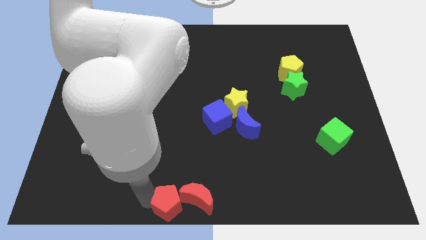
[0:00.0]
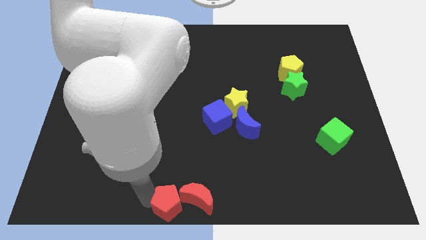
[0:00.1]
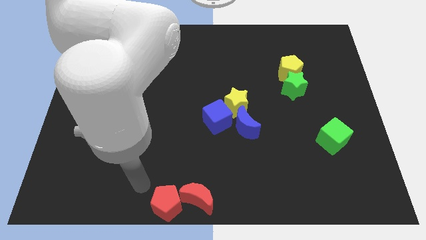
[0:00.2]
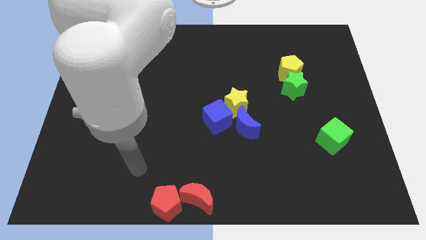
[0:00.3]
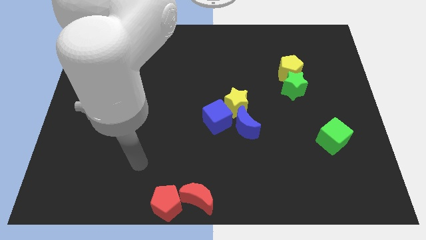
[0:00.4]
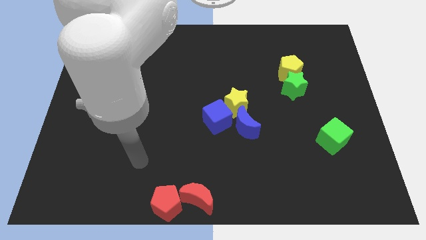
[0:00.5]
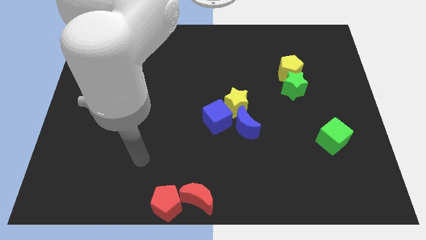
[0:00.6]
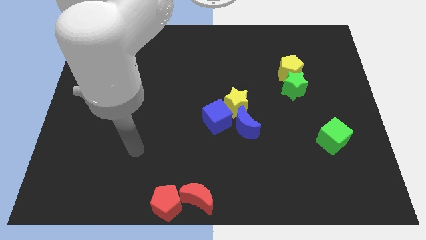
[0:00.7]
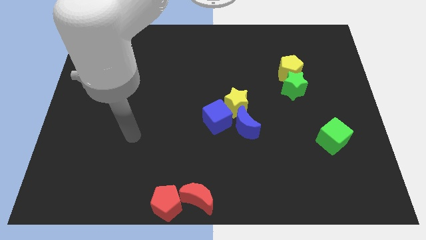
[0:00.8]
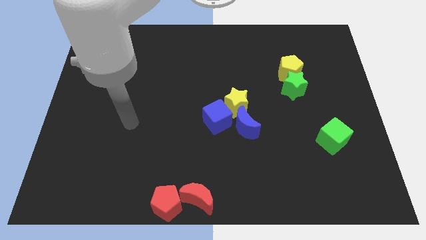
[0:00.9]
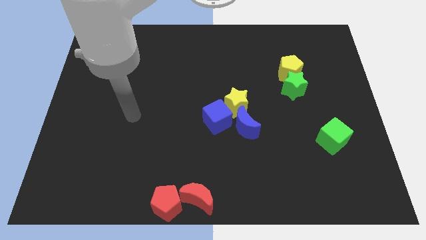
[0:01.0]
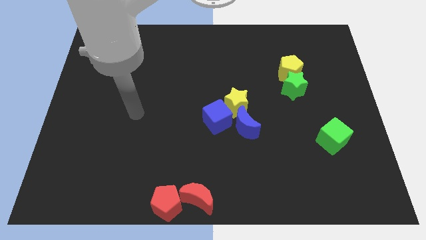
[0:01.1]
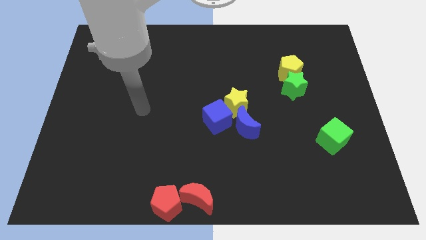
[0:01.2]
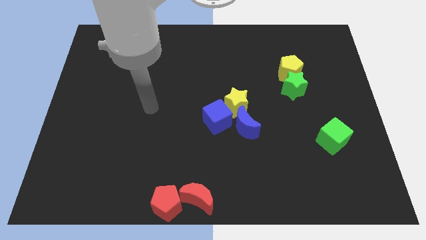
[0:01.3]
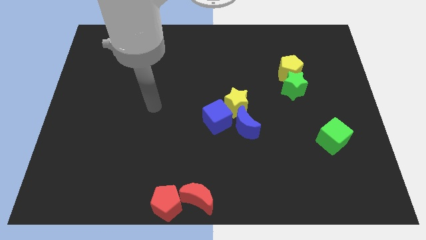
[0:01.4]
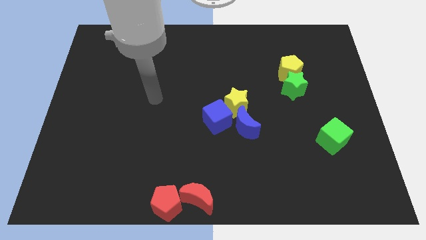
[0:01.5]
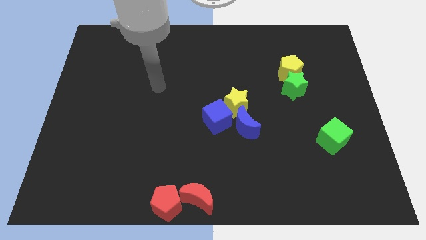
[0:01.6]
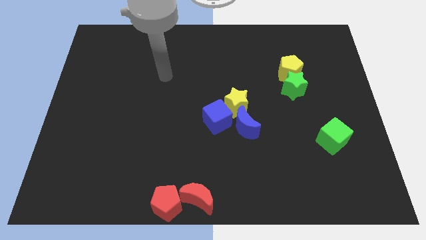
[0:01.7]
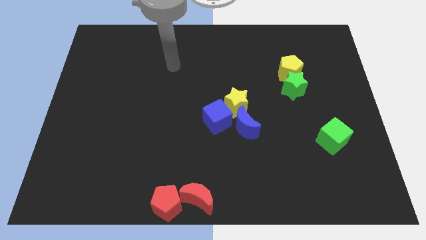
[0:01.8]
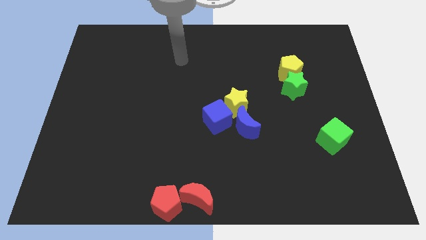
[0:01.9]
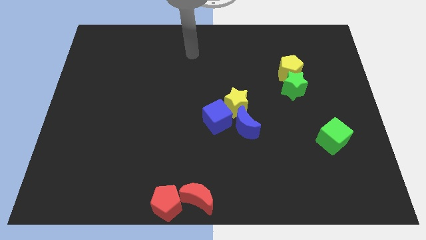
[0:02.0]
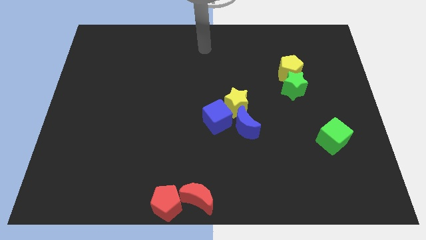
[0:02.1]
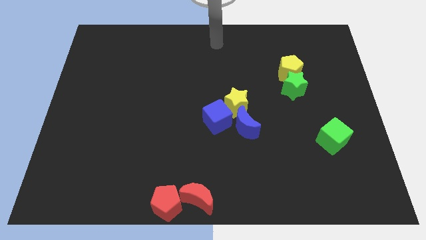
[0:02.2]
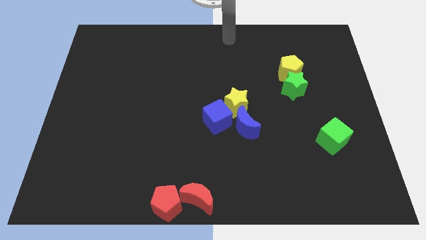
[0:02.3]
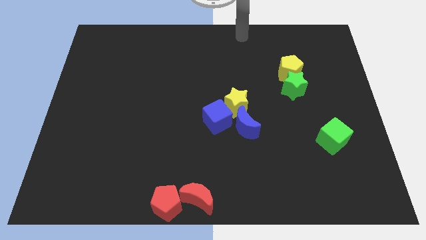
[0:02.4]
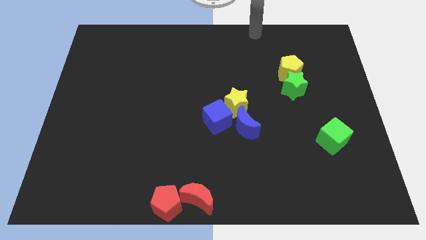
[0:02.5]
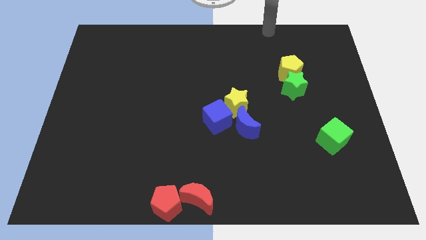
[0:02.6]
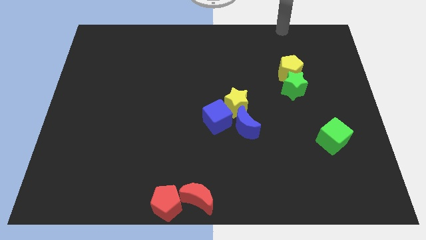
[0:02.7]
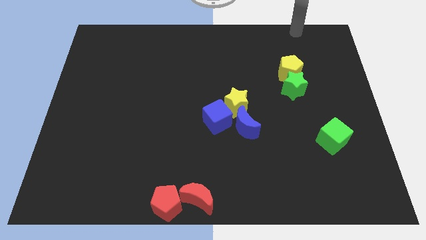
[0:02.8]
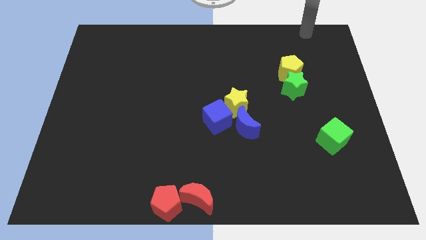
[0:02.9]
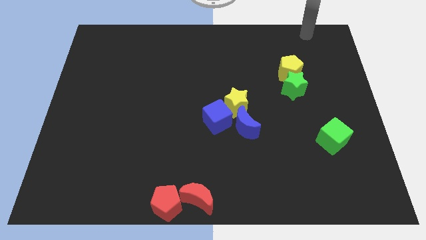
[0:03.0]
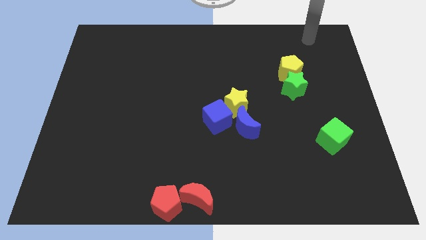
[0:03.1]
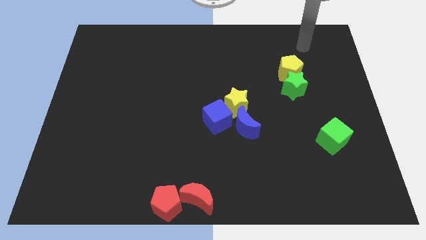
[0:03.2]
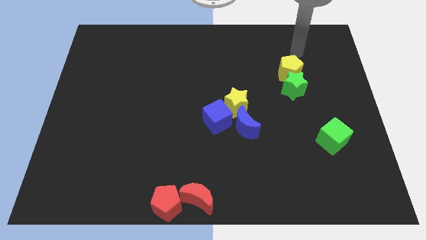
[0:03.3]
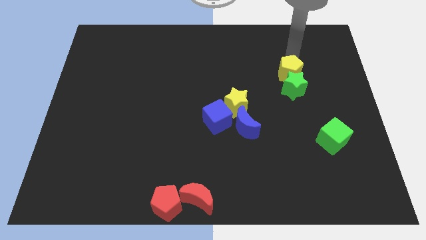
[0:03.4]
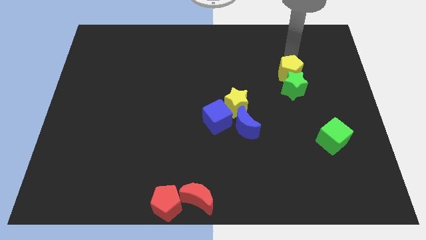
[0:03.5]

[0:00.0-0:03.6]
move your arm on top of the yellow pentagon

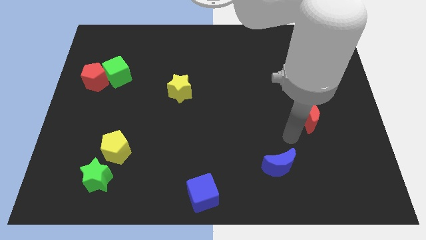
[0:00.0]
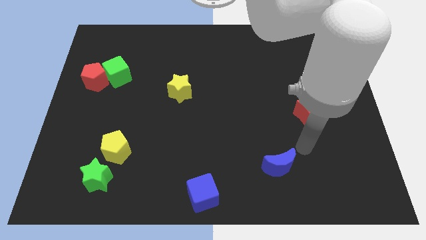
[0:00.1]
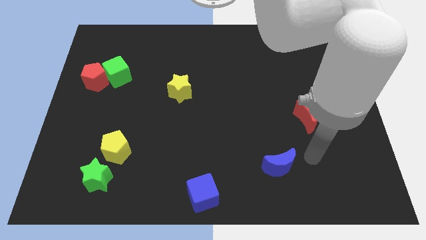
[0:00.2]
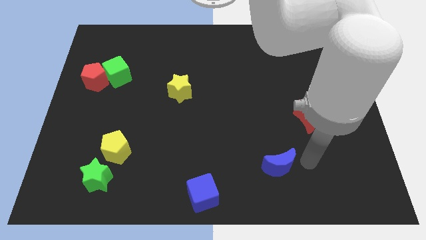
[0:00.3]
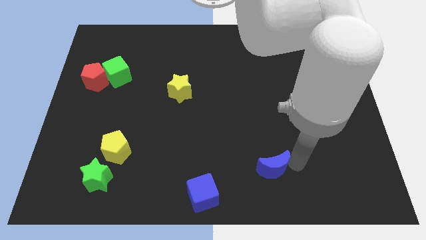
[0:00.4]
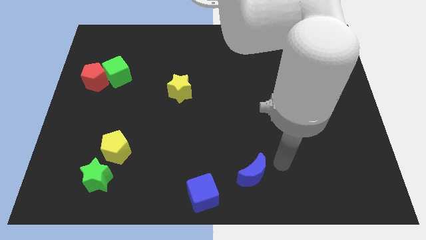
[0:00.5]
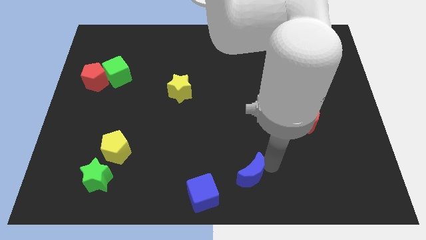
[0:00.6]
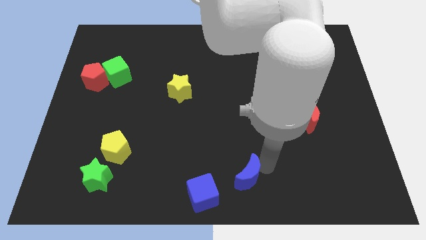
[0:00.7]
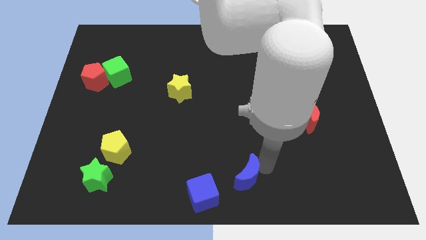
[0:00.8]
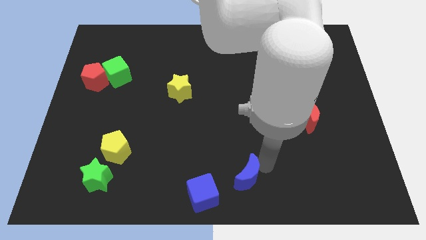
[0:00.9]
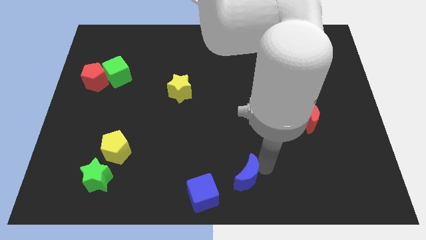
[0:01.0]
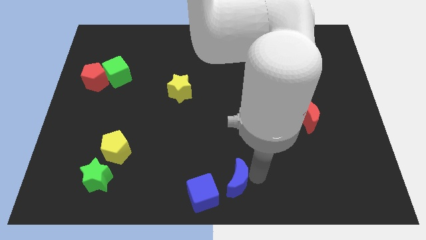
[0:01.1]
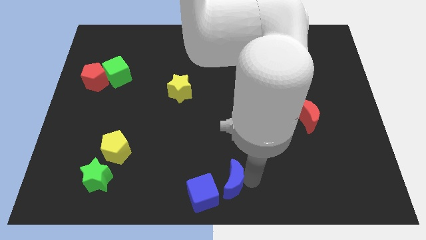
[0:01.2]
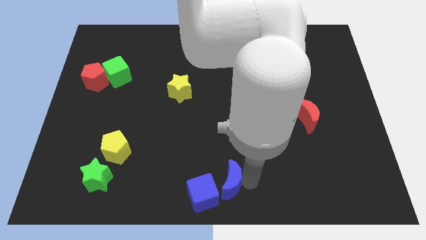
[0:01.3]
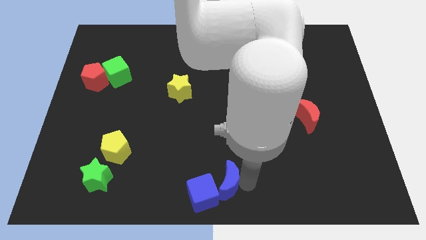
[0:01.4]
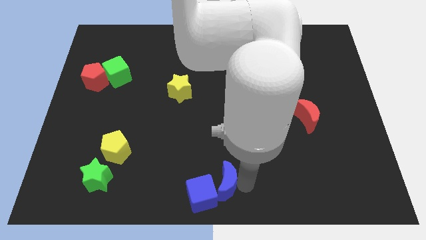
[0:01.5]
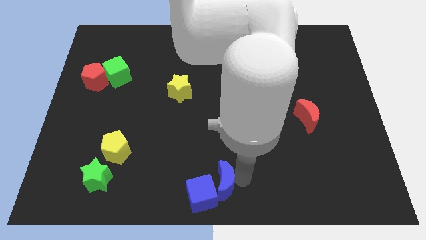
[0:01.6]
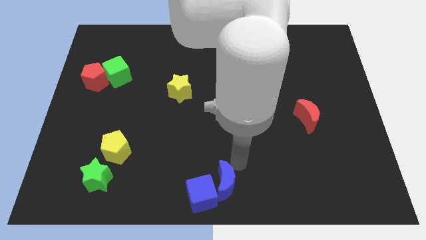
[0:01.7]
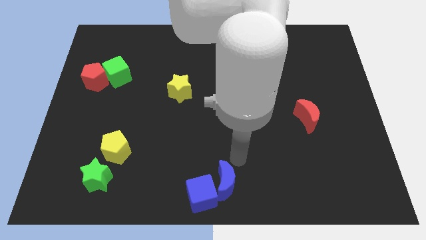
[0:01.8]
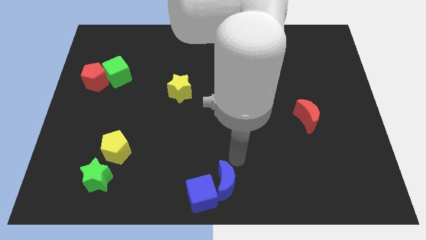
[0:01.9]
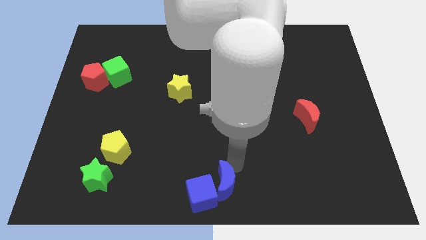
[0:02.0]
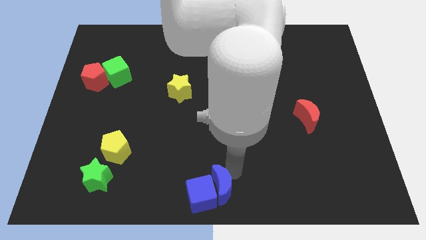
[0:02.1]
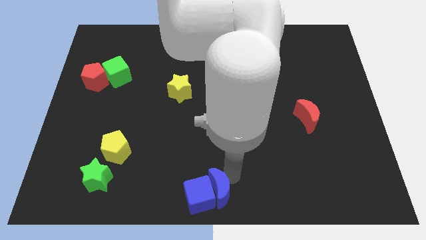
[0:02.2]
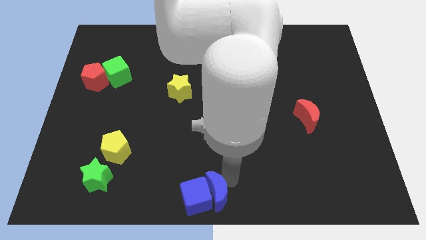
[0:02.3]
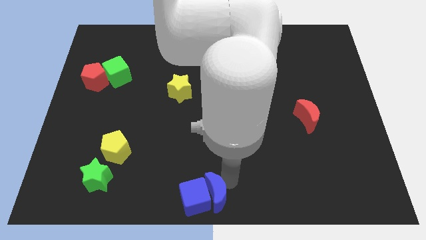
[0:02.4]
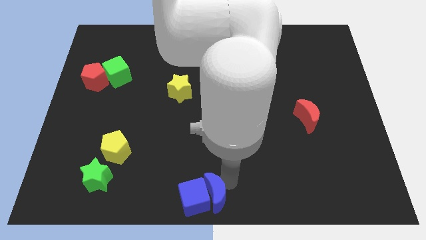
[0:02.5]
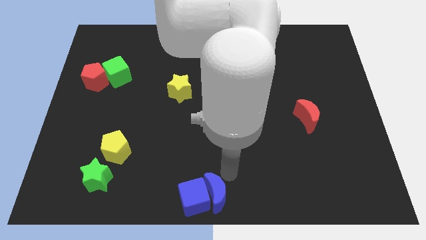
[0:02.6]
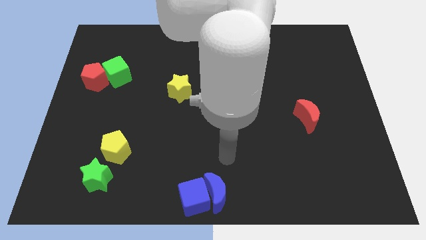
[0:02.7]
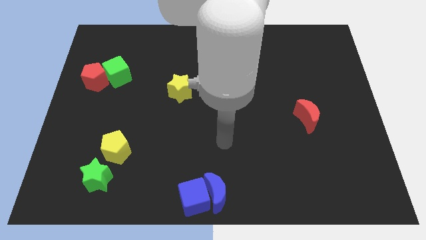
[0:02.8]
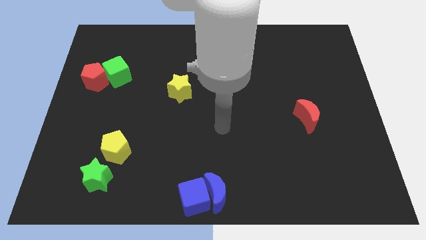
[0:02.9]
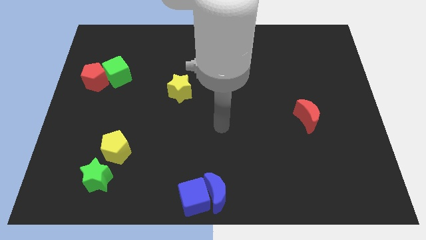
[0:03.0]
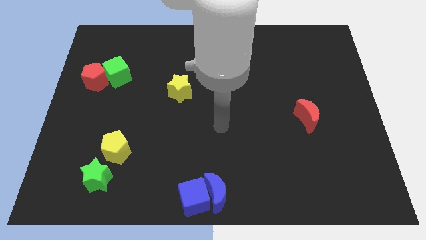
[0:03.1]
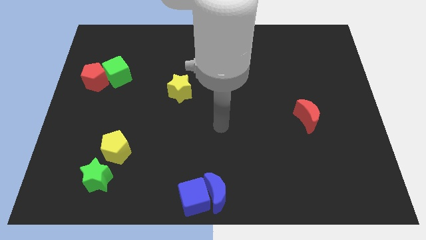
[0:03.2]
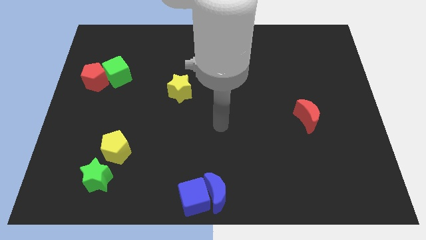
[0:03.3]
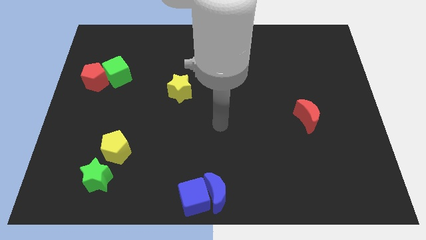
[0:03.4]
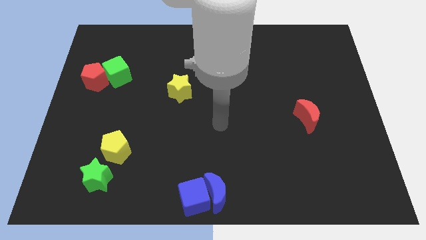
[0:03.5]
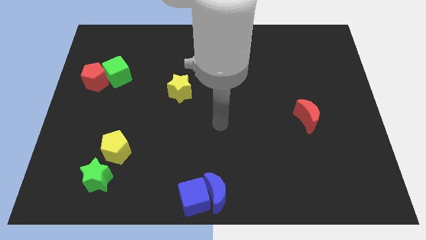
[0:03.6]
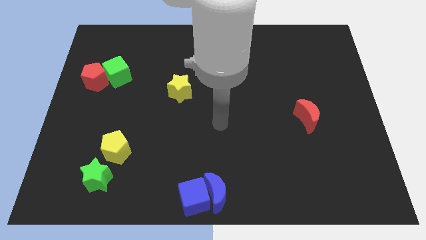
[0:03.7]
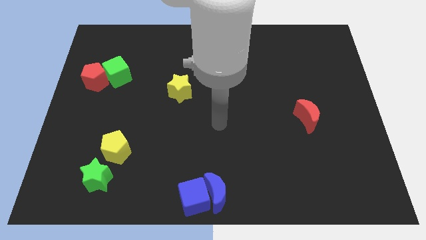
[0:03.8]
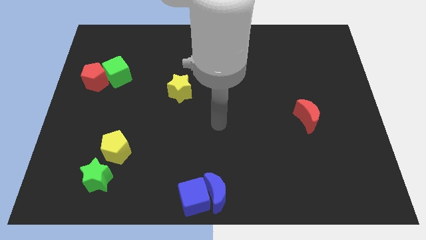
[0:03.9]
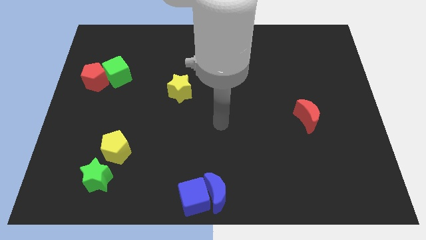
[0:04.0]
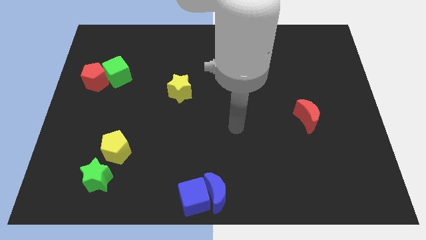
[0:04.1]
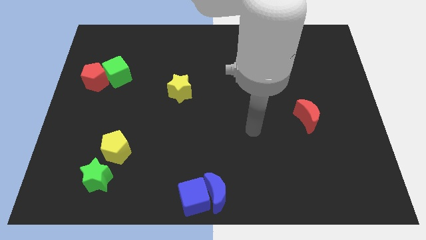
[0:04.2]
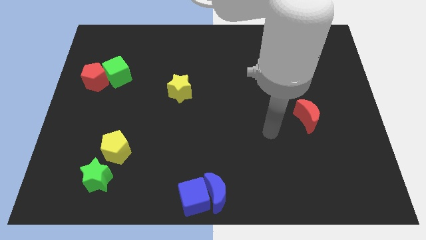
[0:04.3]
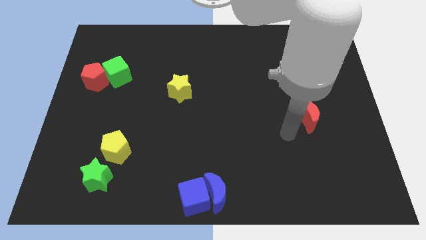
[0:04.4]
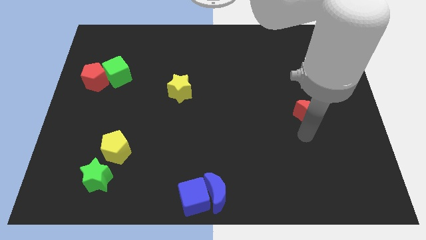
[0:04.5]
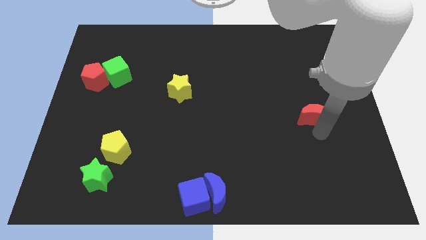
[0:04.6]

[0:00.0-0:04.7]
push the blue crescent into the blue cube

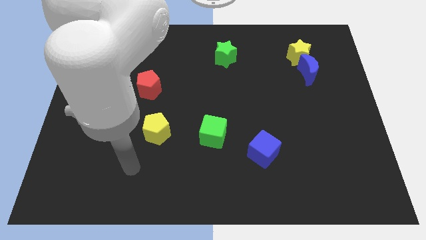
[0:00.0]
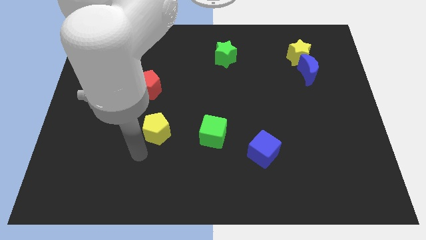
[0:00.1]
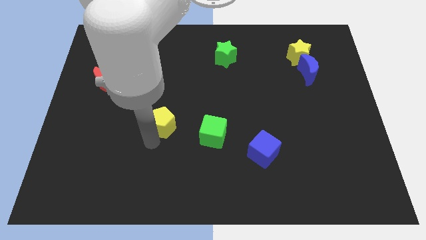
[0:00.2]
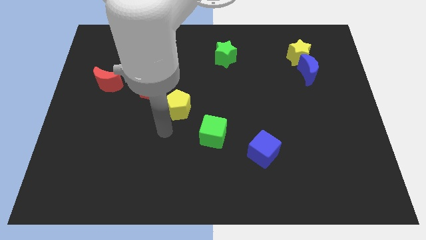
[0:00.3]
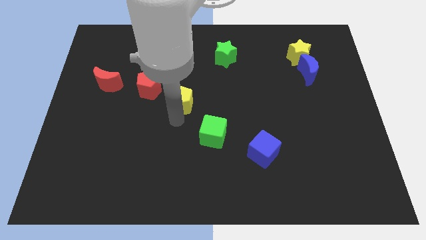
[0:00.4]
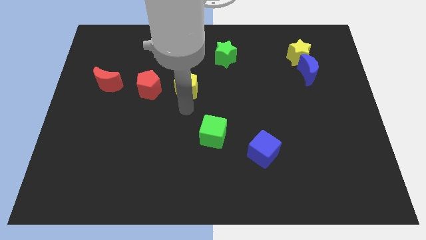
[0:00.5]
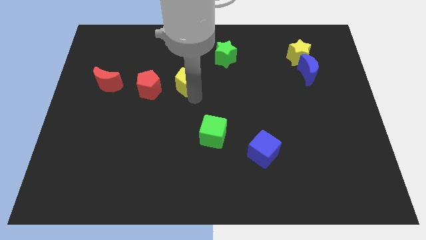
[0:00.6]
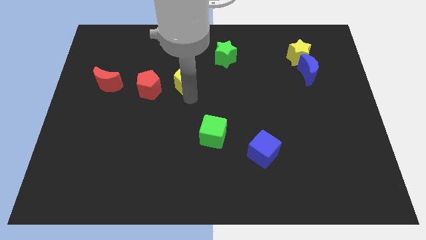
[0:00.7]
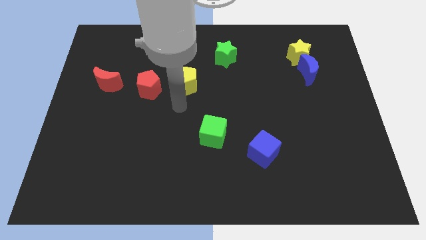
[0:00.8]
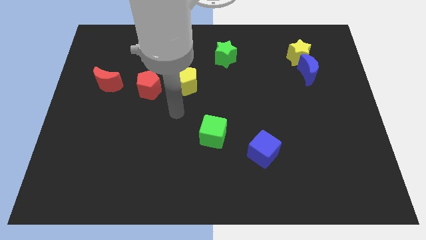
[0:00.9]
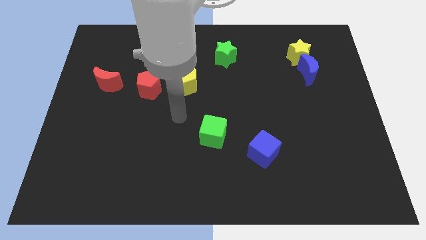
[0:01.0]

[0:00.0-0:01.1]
push the yellow pentagon right to the red pentagon
